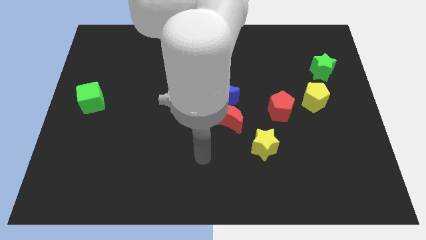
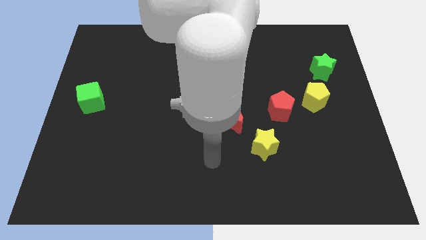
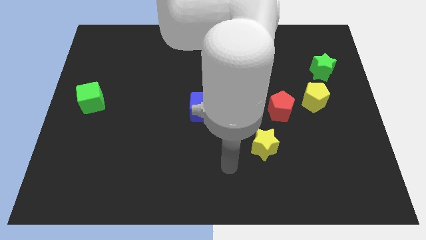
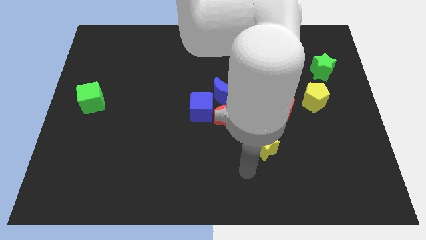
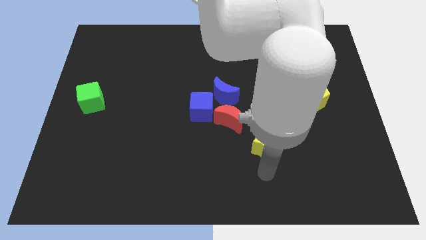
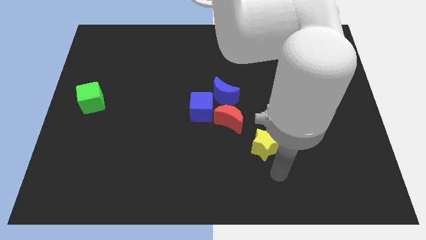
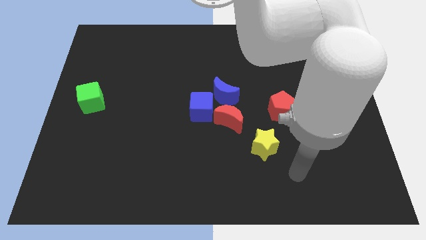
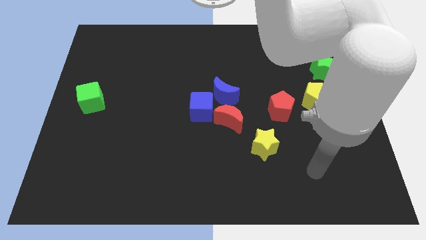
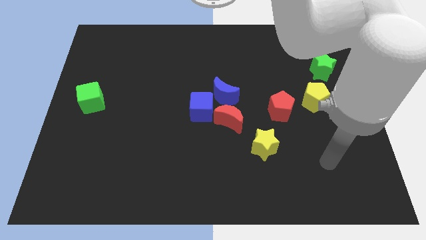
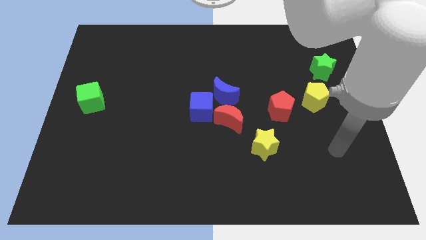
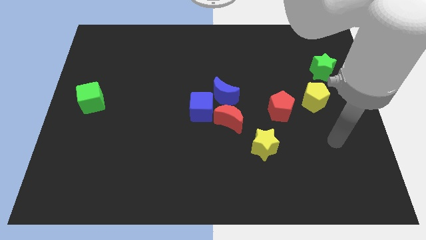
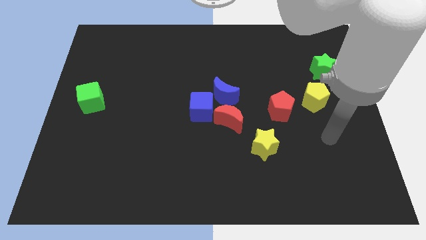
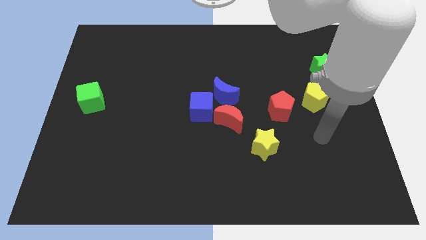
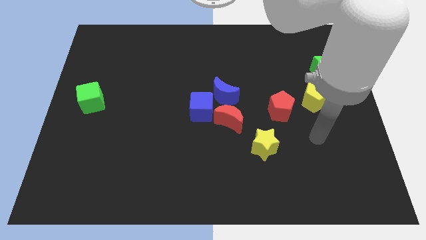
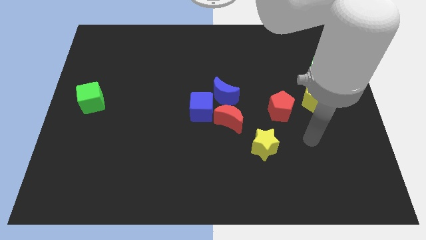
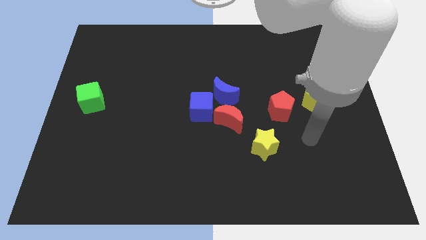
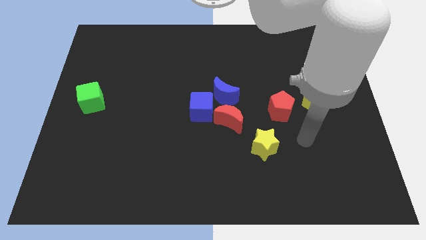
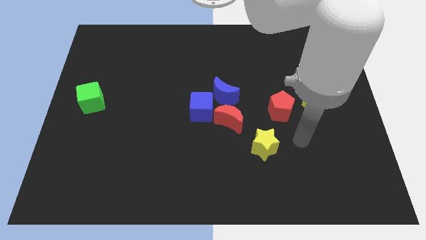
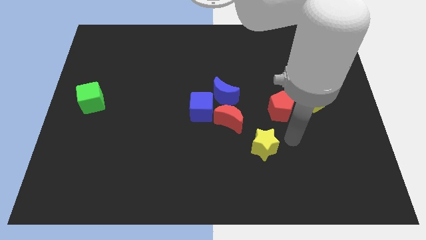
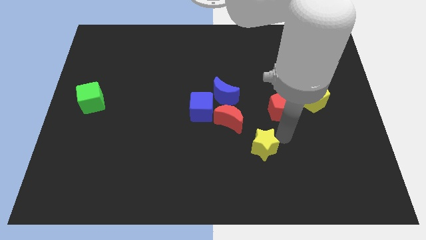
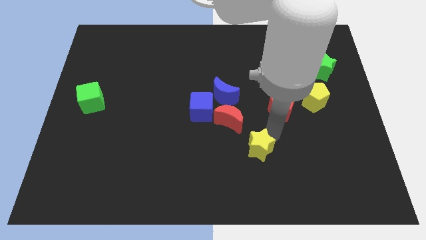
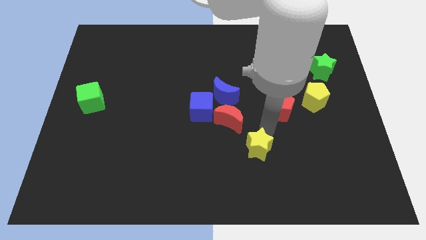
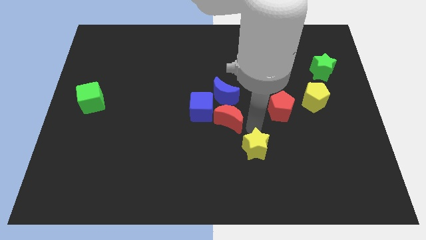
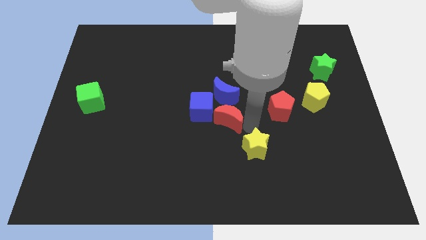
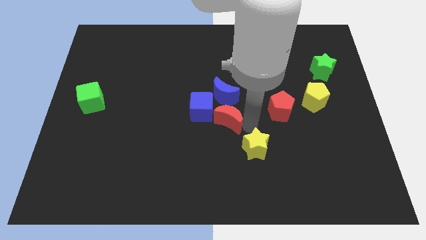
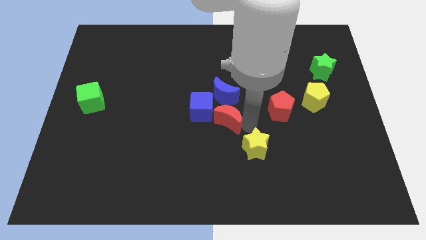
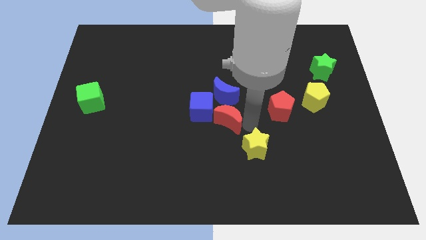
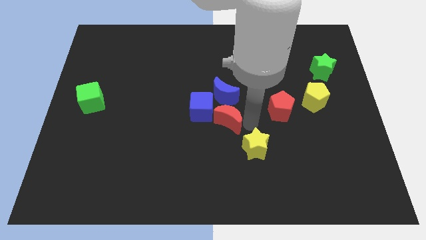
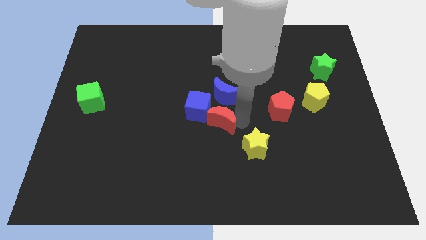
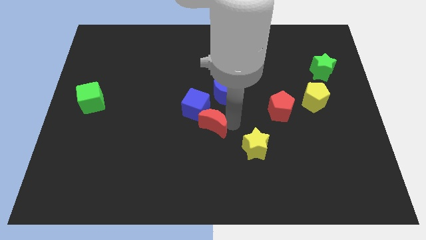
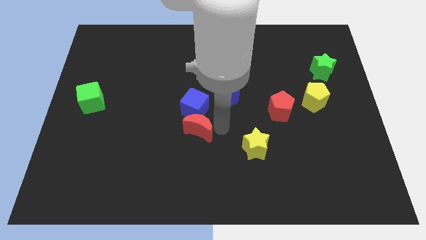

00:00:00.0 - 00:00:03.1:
place red crescent below blue cube

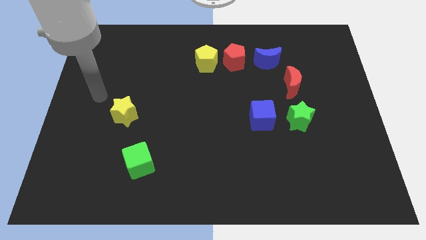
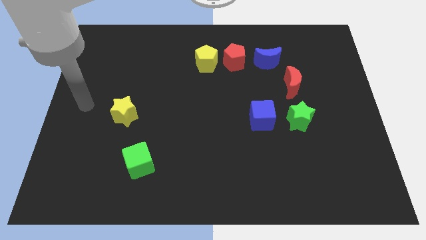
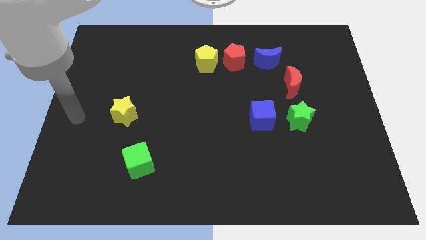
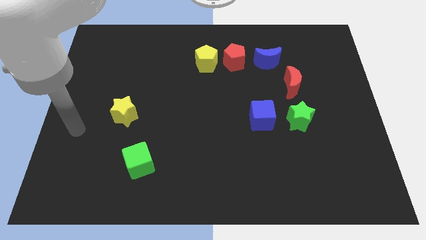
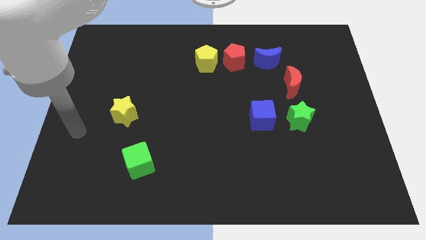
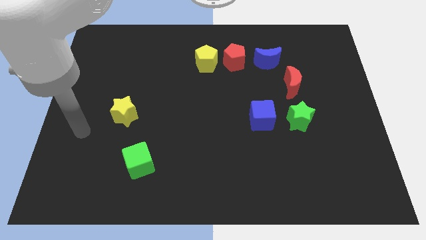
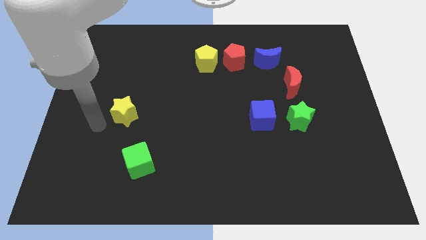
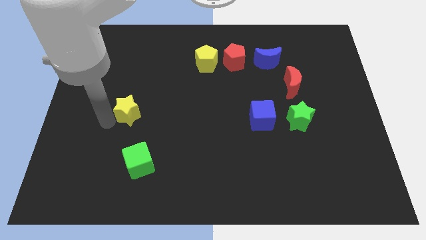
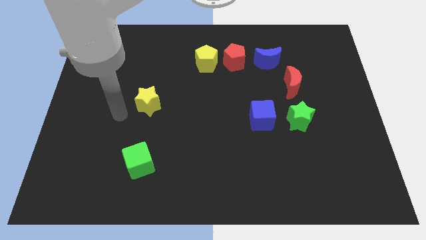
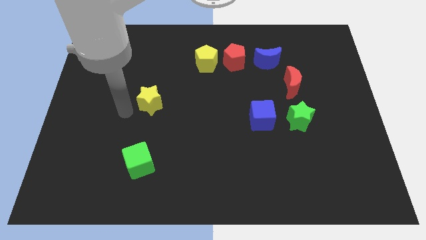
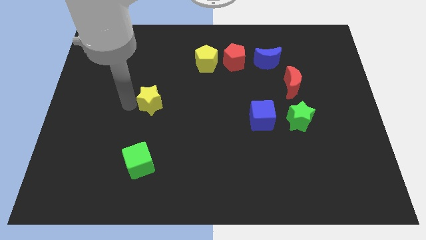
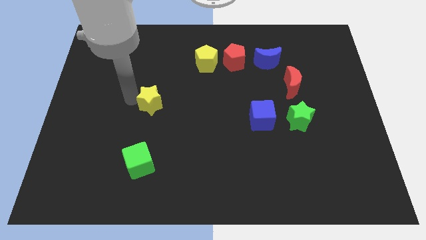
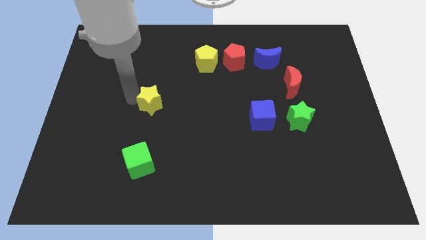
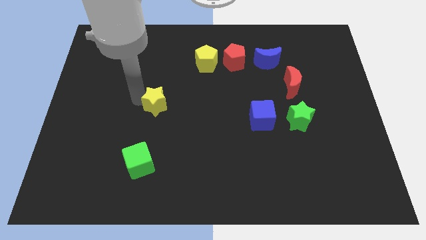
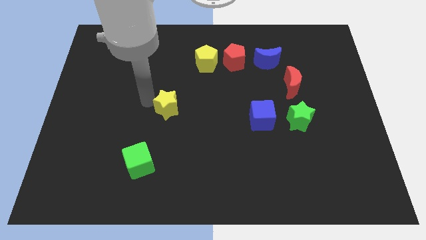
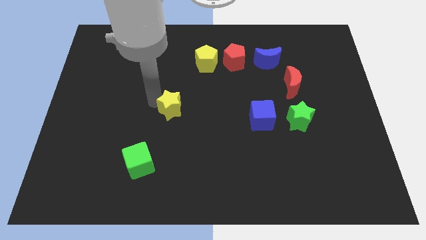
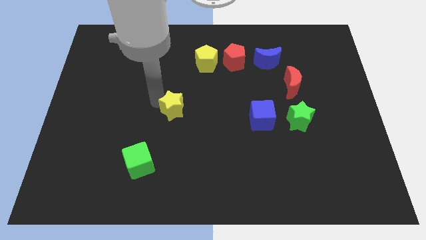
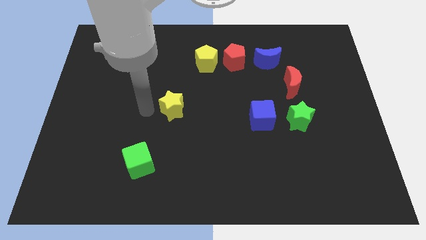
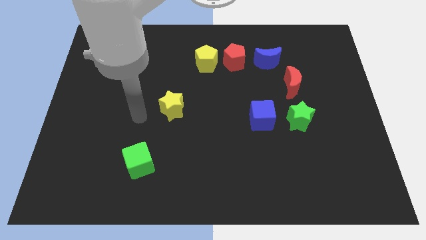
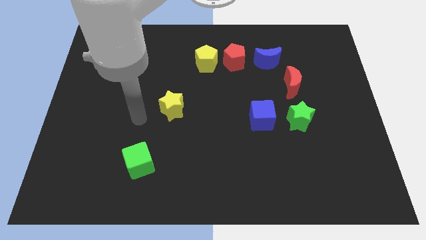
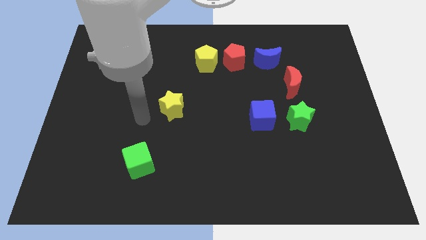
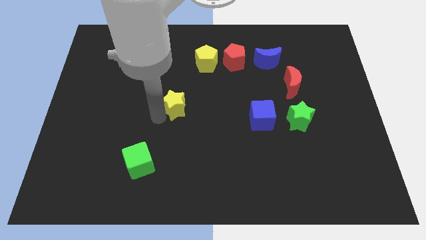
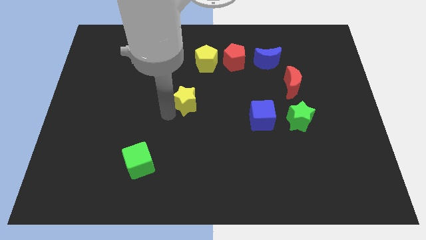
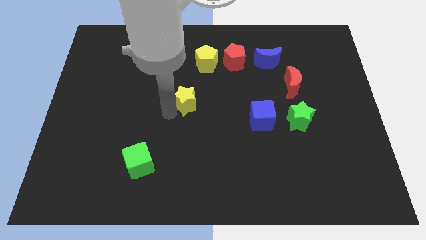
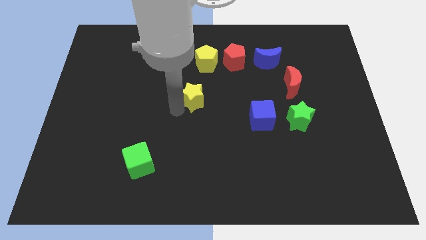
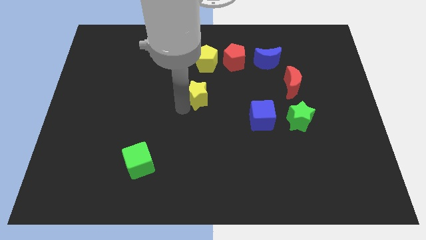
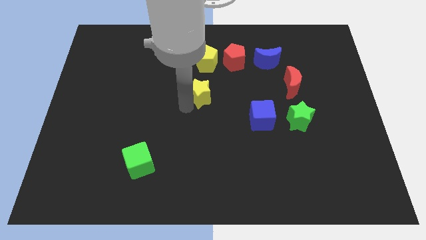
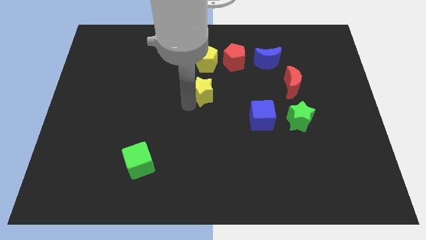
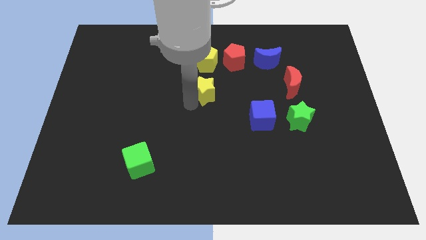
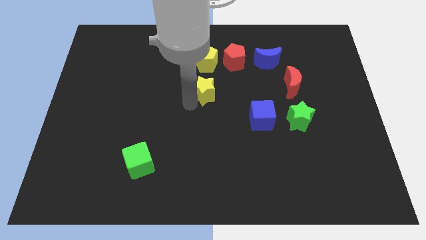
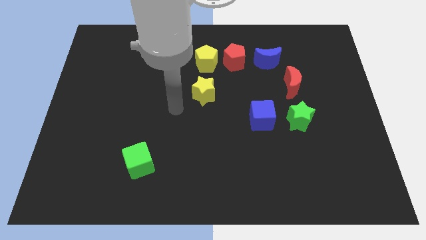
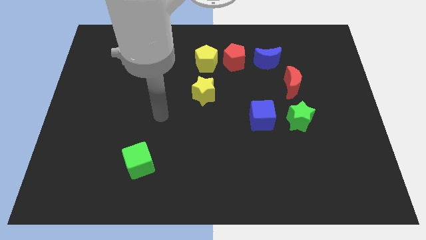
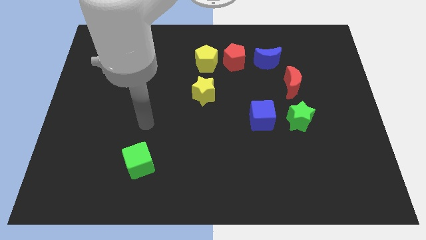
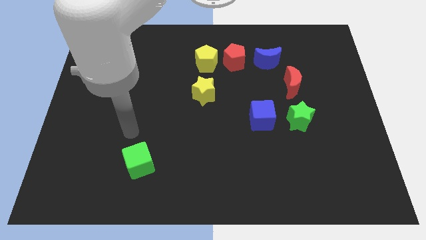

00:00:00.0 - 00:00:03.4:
place the yellow star below the yellow pentagon

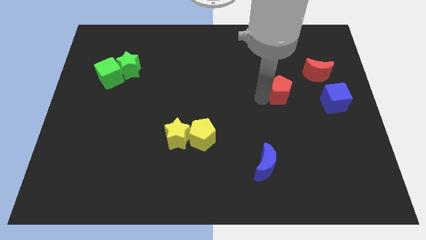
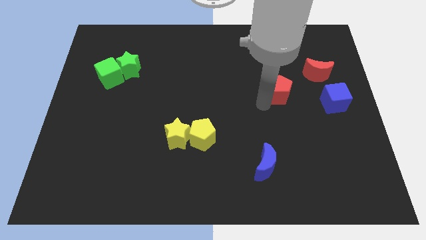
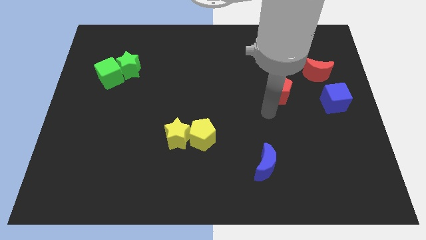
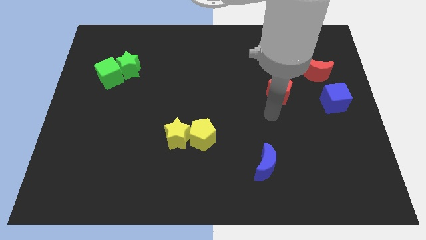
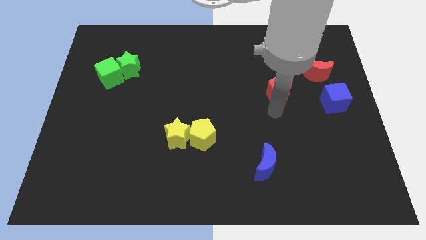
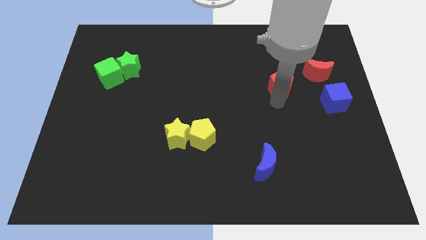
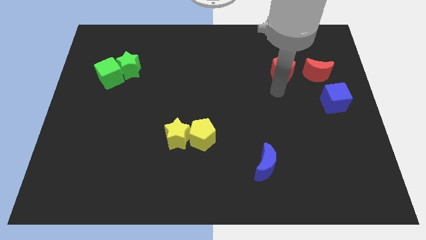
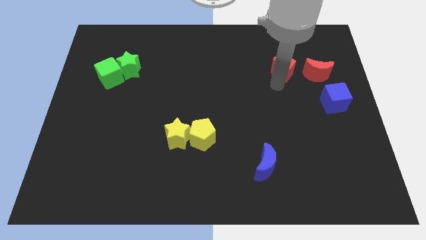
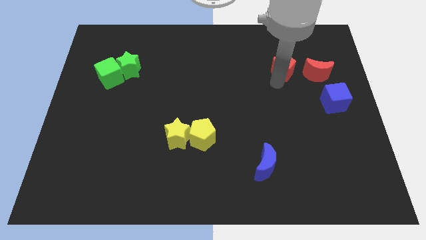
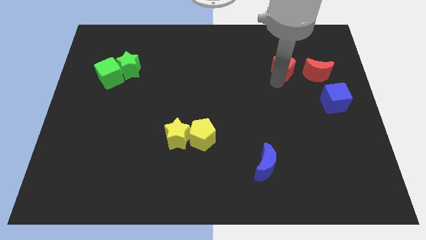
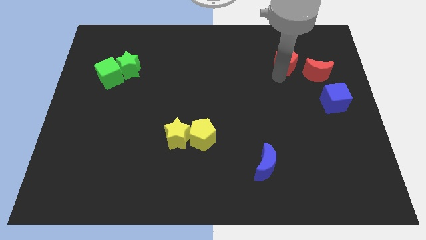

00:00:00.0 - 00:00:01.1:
push the red pentagon towards the top right of the board

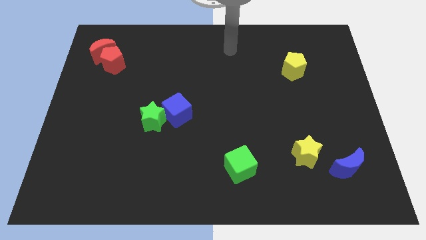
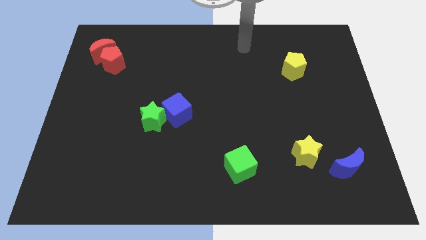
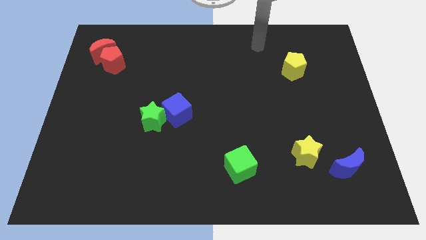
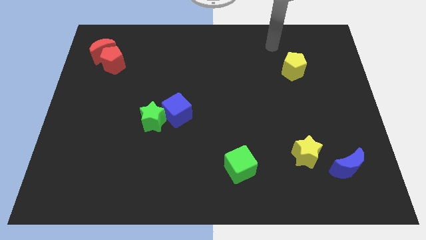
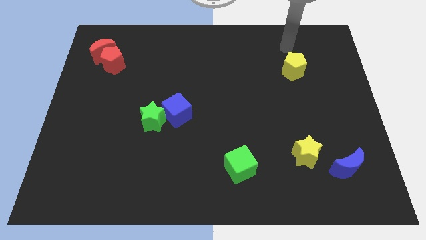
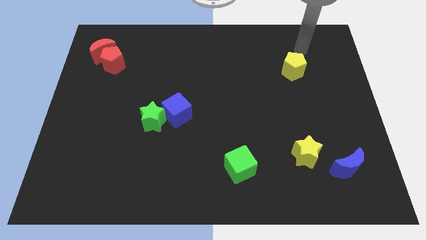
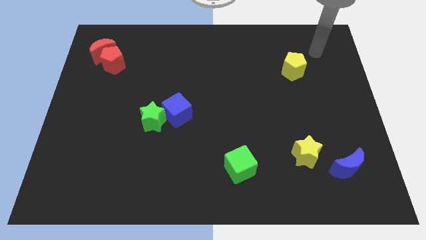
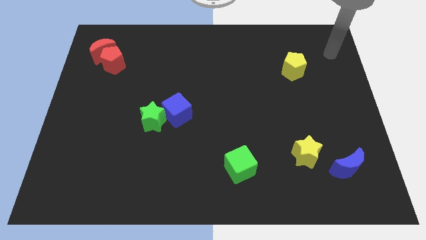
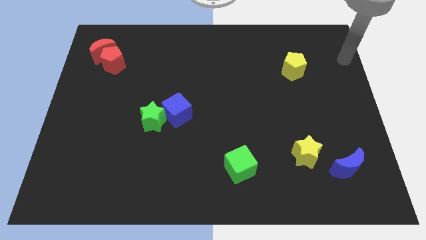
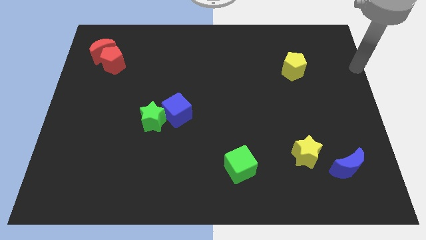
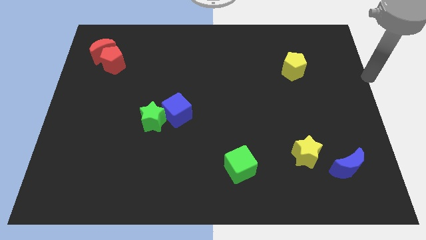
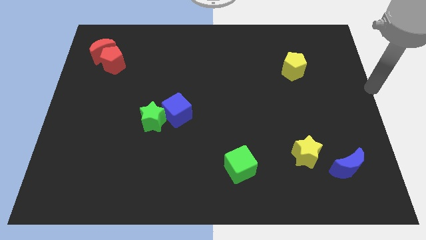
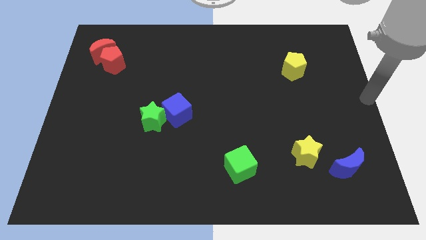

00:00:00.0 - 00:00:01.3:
place your hand at right center of the board
